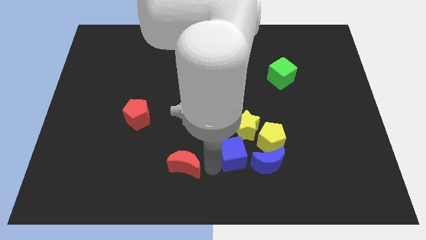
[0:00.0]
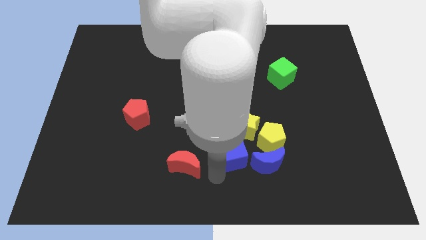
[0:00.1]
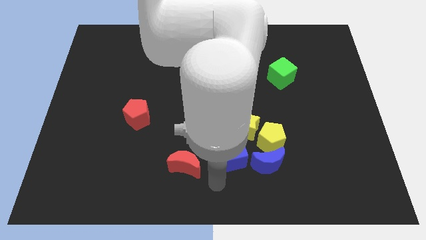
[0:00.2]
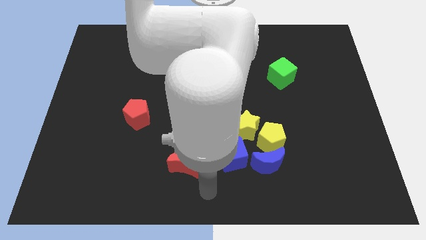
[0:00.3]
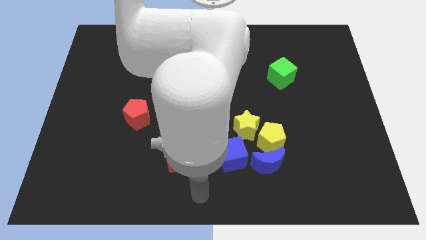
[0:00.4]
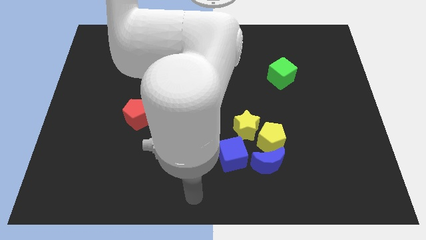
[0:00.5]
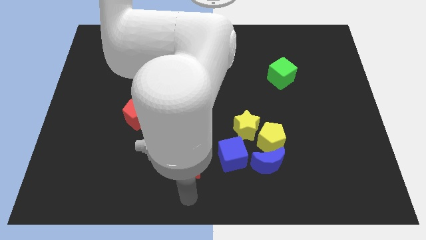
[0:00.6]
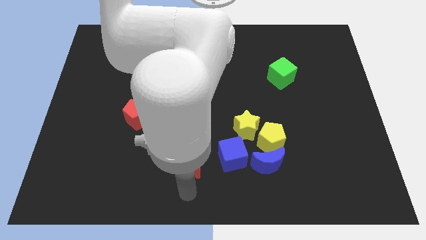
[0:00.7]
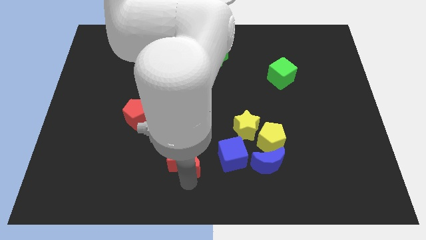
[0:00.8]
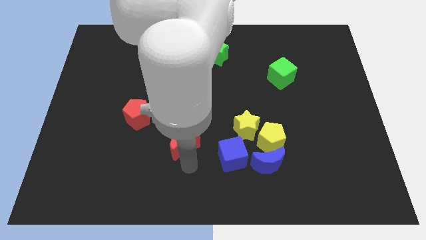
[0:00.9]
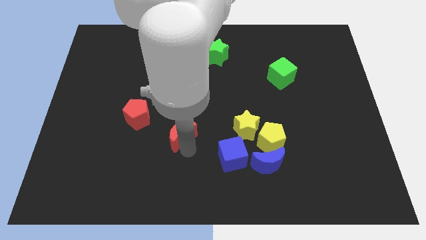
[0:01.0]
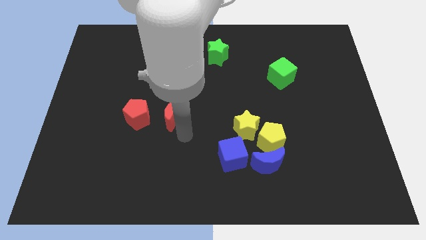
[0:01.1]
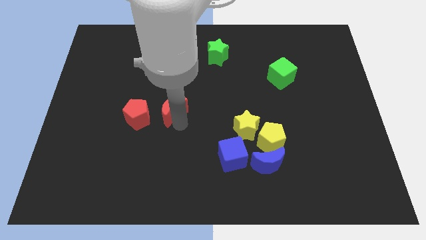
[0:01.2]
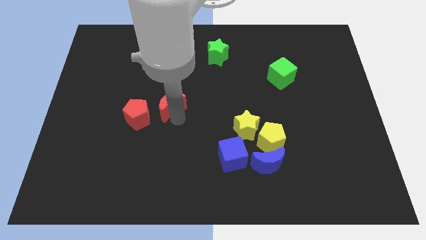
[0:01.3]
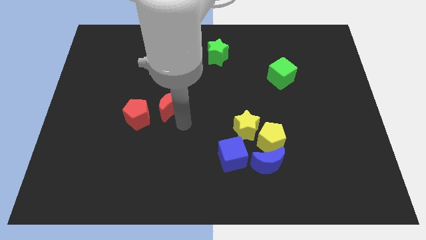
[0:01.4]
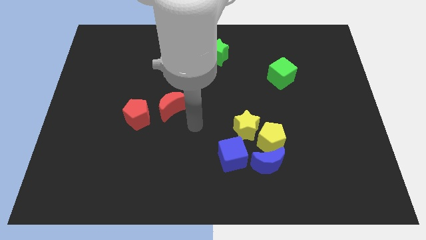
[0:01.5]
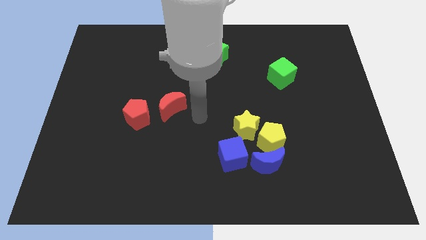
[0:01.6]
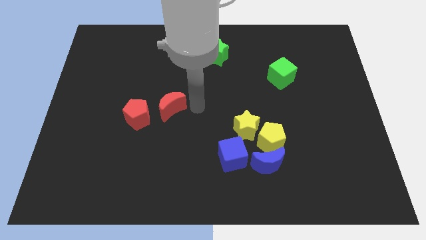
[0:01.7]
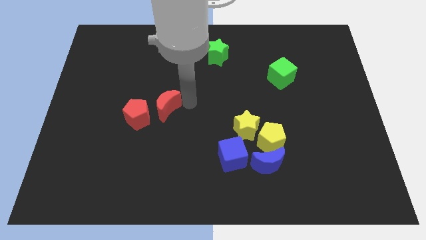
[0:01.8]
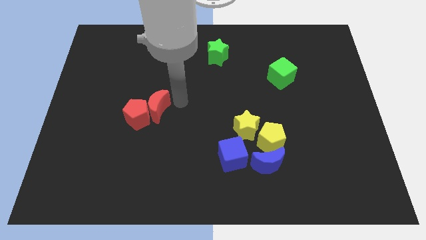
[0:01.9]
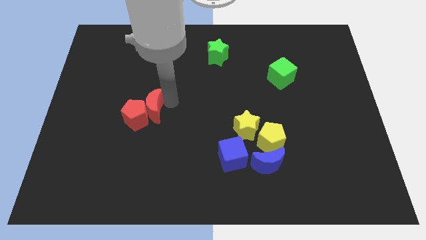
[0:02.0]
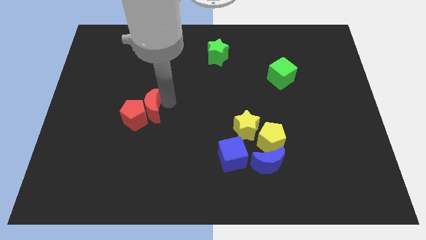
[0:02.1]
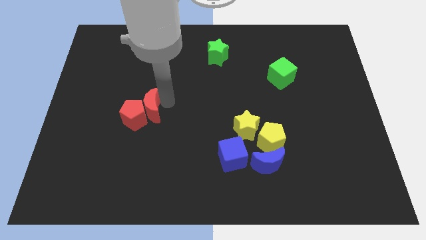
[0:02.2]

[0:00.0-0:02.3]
move the red moon into the red pentagon

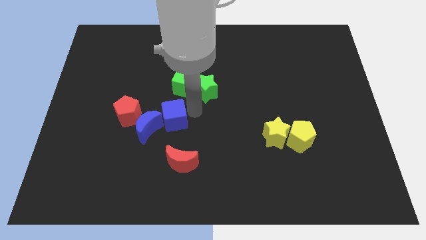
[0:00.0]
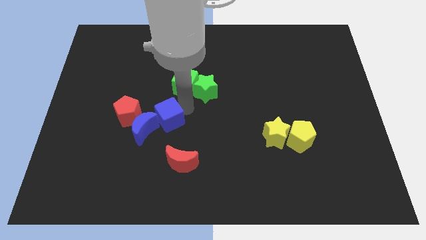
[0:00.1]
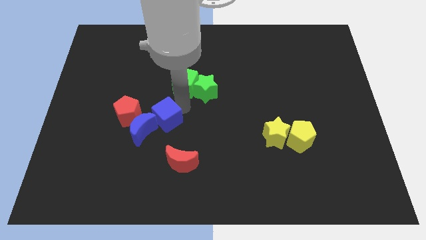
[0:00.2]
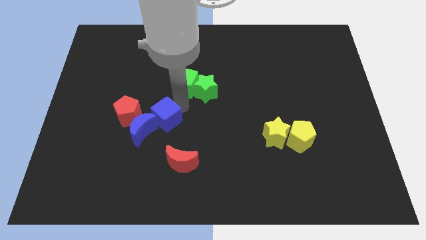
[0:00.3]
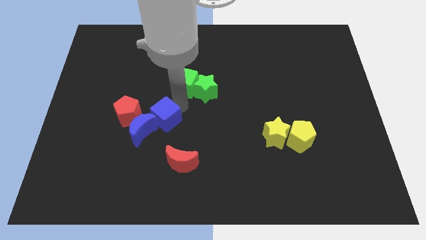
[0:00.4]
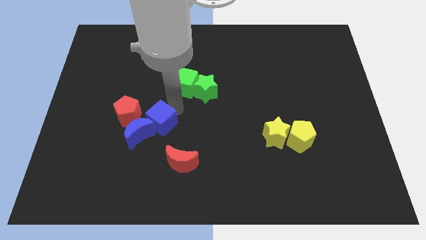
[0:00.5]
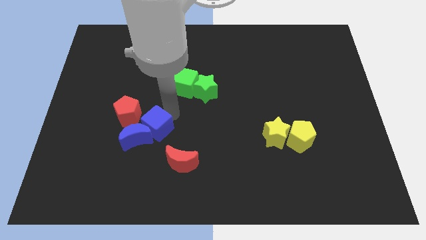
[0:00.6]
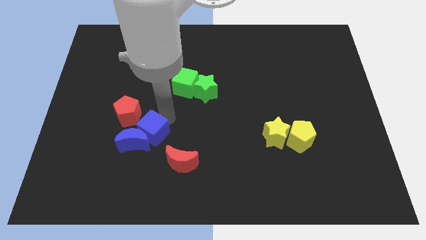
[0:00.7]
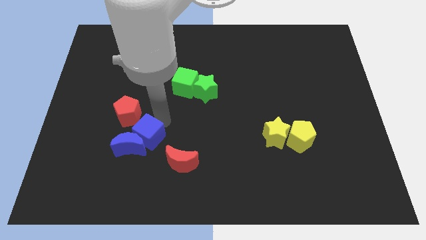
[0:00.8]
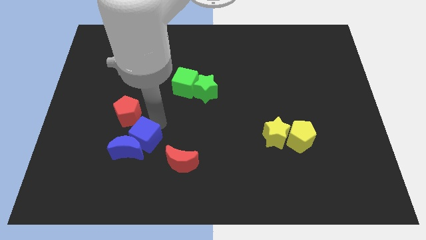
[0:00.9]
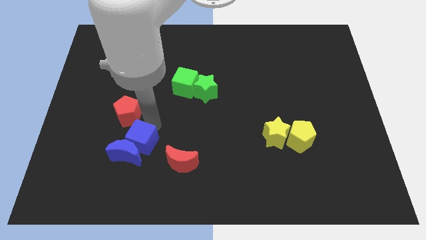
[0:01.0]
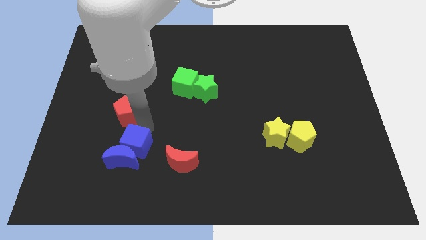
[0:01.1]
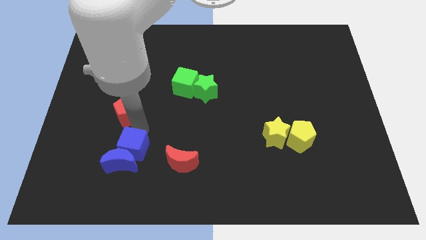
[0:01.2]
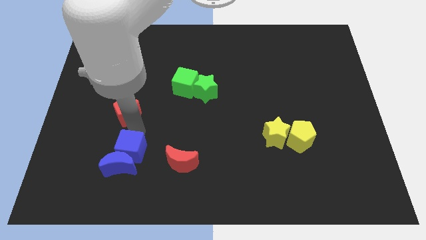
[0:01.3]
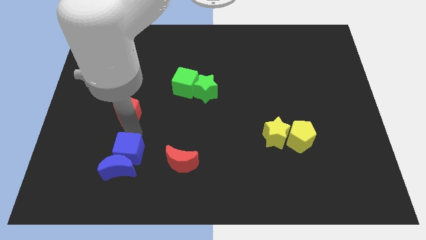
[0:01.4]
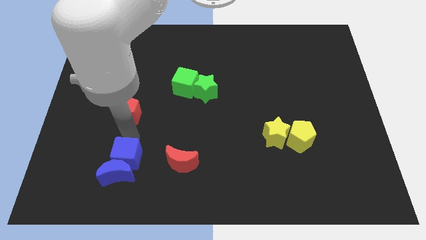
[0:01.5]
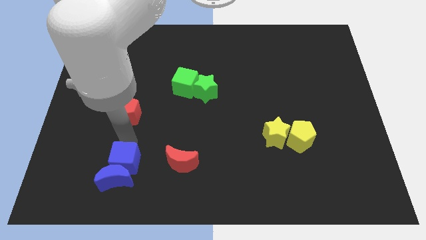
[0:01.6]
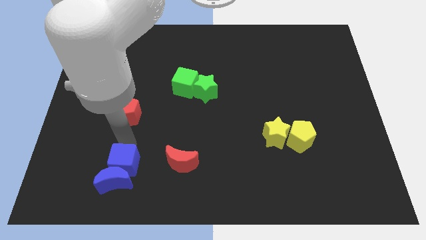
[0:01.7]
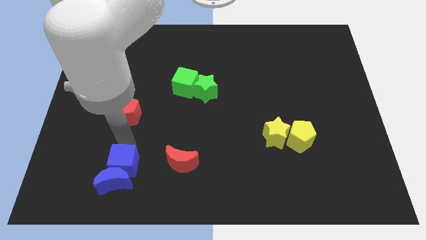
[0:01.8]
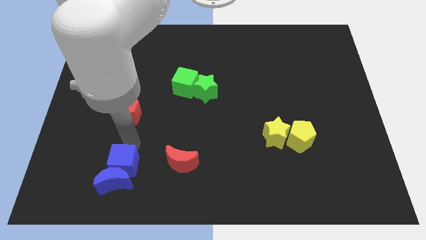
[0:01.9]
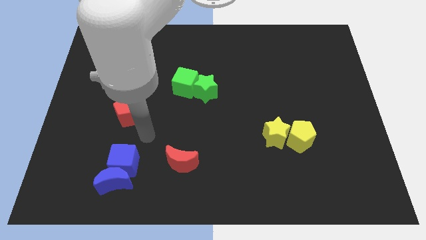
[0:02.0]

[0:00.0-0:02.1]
drag blue cube to the down left side of the board

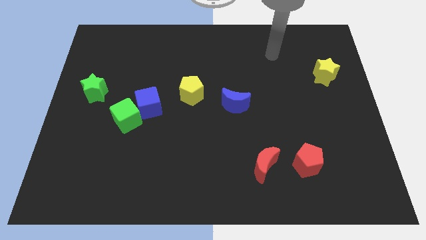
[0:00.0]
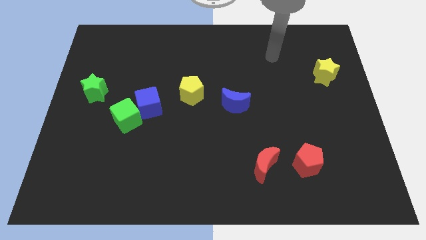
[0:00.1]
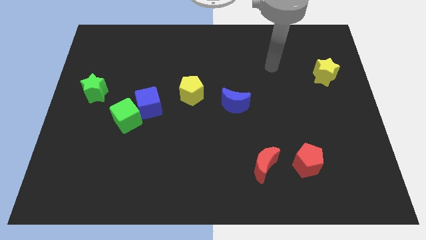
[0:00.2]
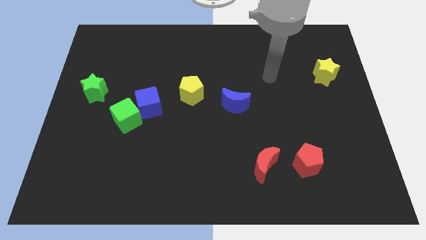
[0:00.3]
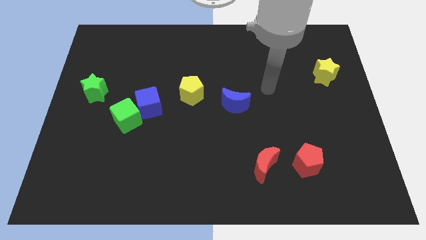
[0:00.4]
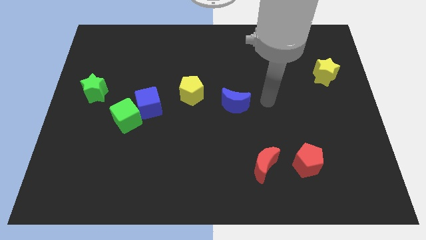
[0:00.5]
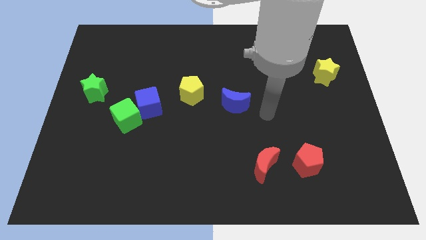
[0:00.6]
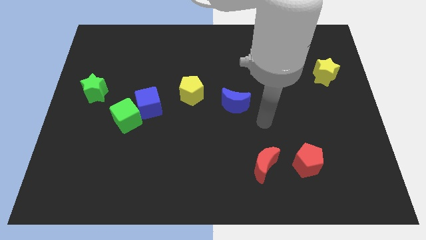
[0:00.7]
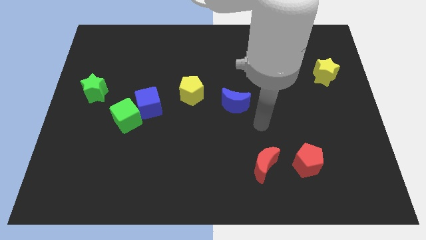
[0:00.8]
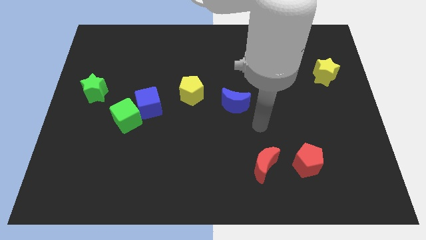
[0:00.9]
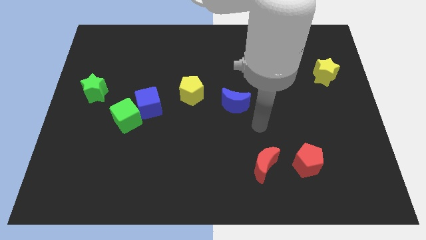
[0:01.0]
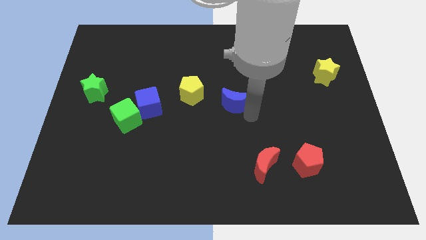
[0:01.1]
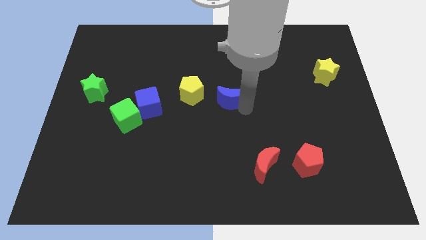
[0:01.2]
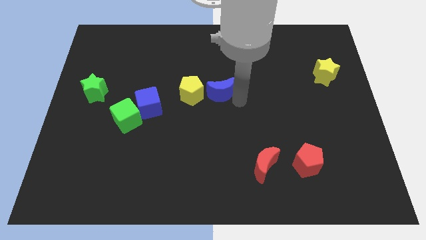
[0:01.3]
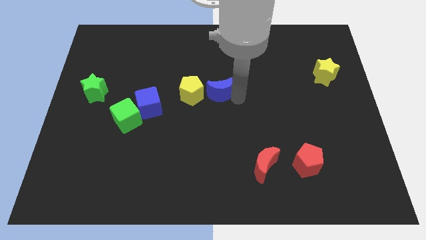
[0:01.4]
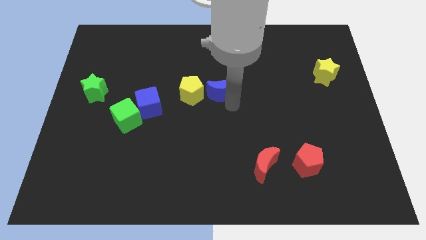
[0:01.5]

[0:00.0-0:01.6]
move your arm close to the blue moon

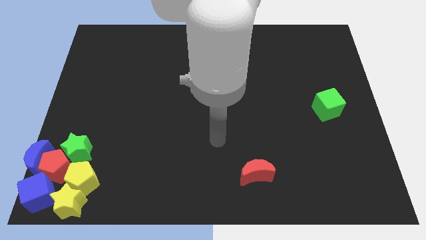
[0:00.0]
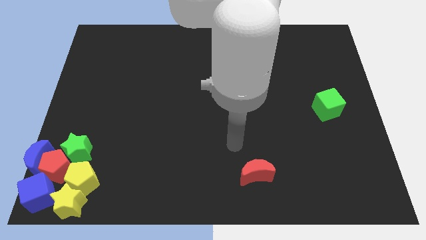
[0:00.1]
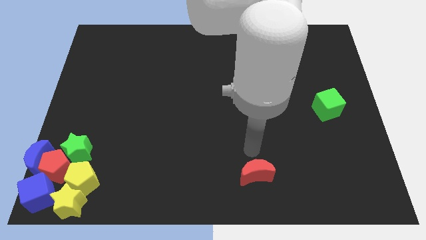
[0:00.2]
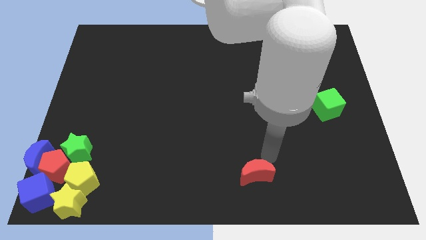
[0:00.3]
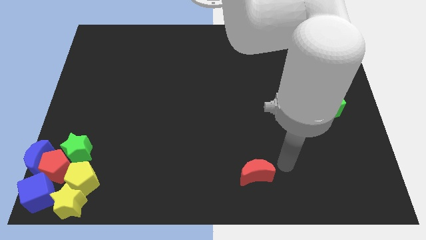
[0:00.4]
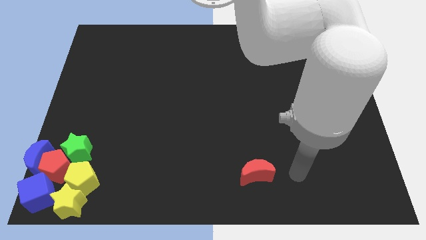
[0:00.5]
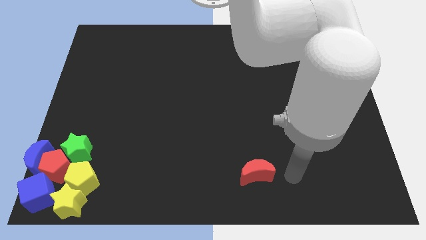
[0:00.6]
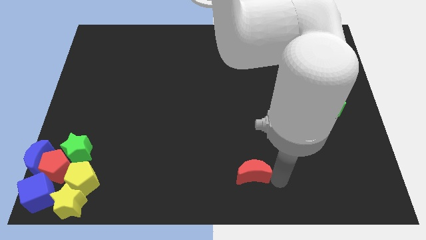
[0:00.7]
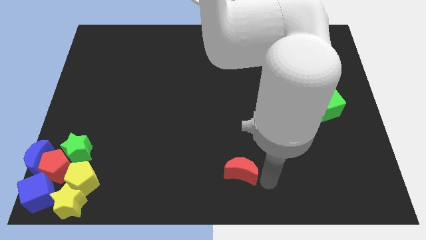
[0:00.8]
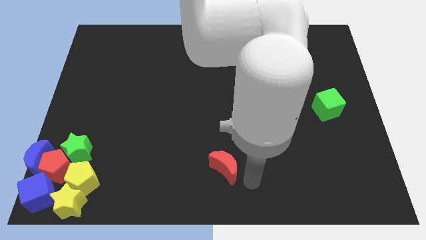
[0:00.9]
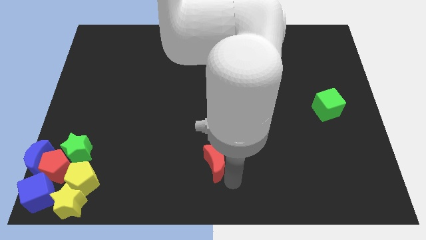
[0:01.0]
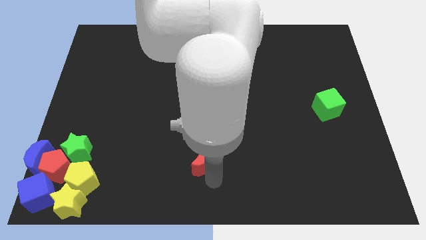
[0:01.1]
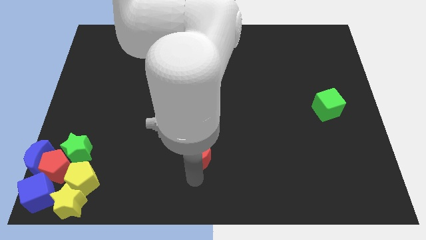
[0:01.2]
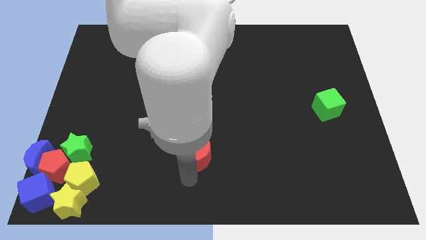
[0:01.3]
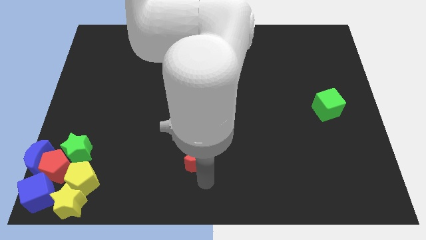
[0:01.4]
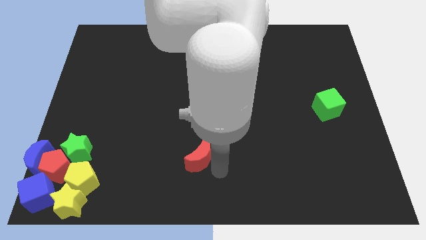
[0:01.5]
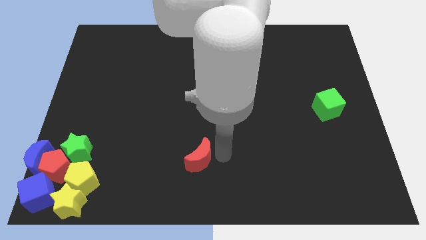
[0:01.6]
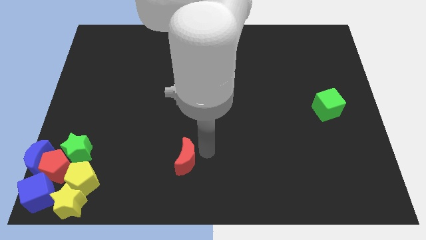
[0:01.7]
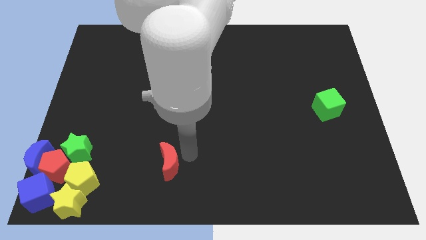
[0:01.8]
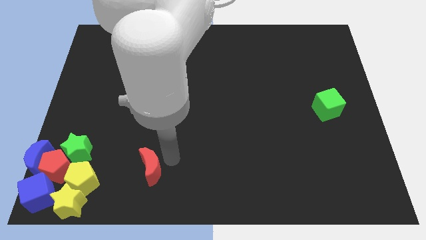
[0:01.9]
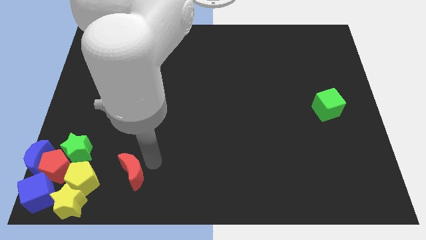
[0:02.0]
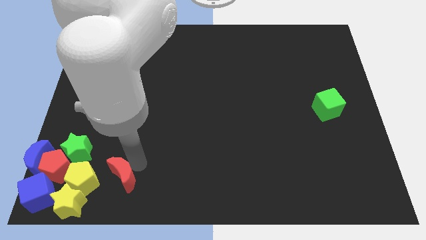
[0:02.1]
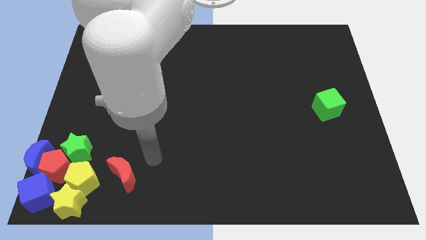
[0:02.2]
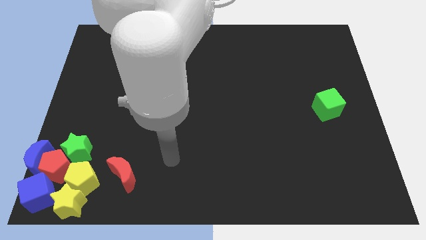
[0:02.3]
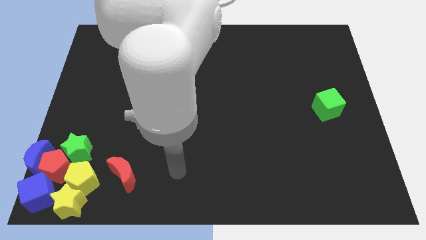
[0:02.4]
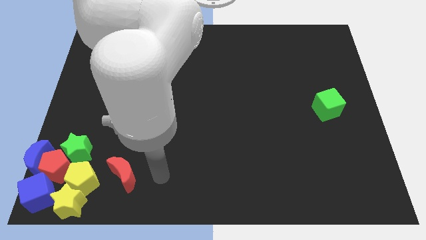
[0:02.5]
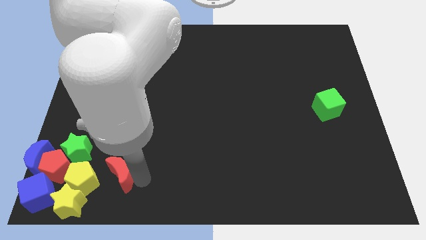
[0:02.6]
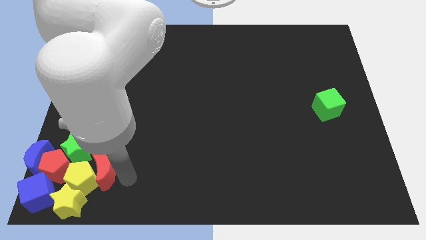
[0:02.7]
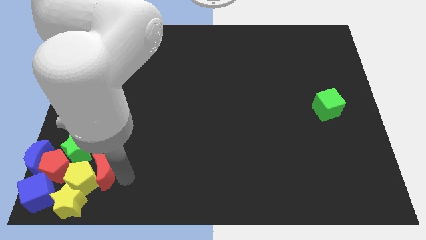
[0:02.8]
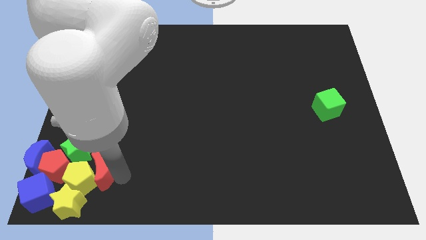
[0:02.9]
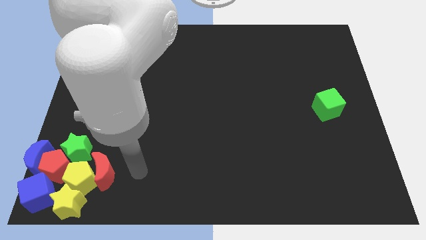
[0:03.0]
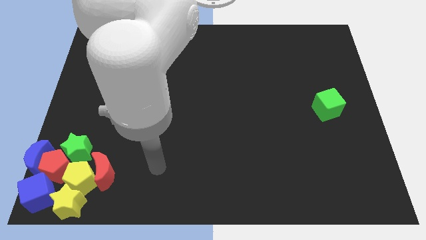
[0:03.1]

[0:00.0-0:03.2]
push the red crescent into the right of the yellow pentagon

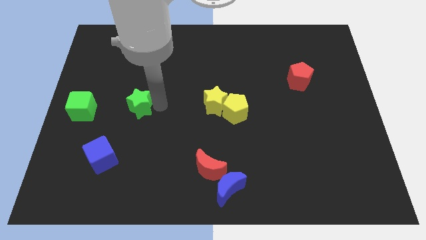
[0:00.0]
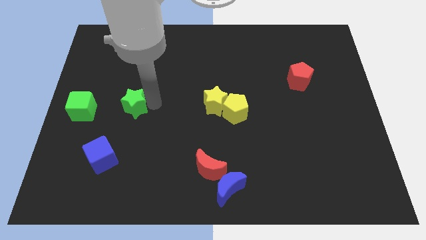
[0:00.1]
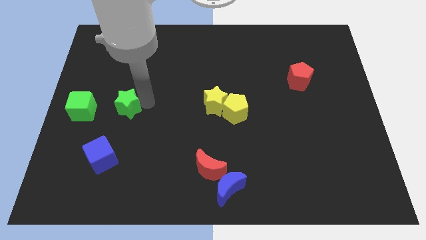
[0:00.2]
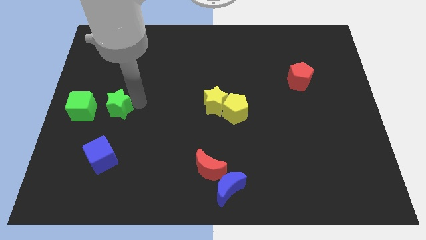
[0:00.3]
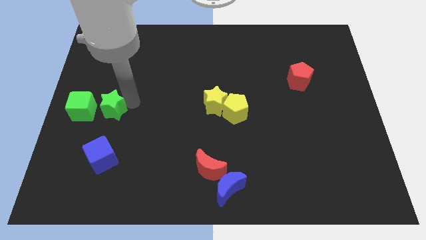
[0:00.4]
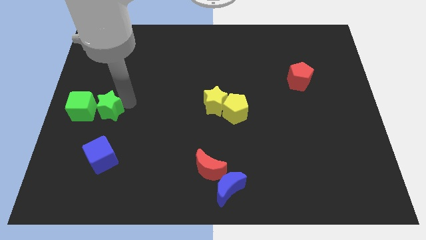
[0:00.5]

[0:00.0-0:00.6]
push the green star to the right of the green cube
